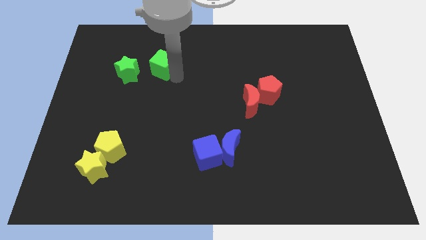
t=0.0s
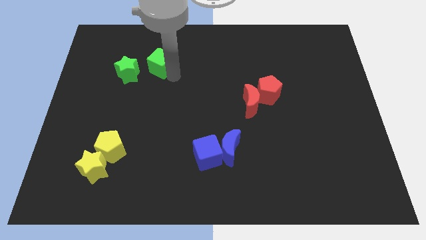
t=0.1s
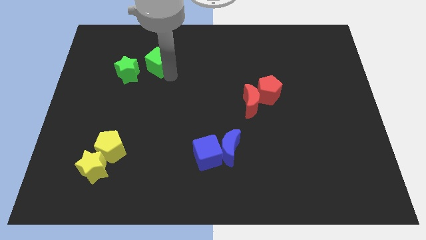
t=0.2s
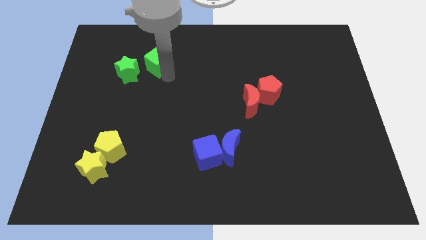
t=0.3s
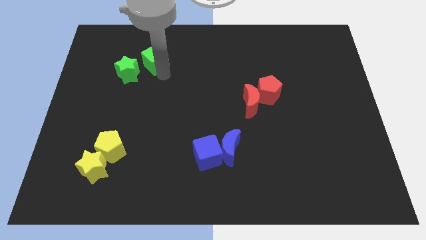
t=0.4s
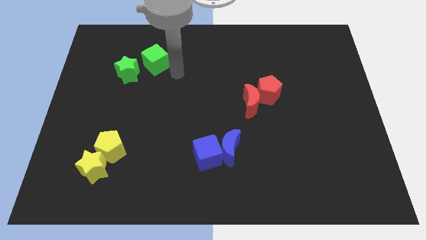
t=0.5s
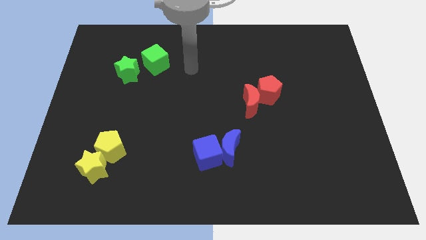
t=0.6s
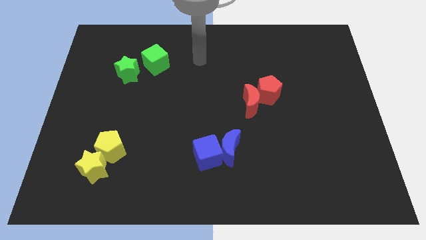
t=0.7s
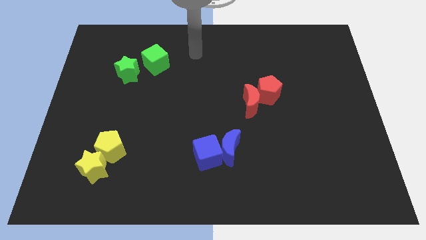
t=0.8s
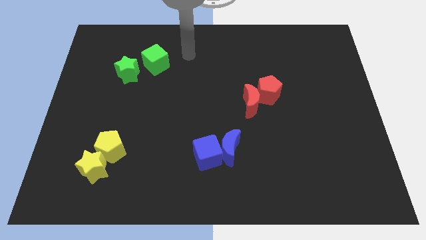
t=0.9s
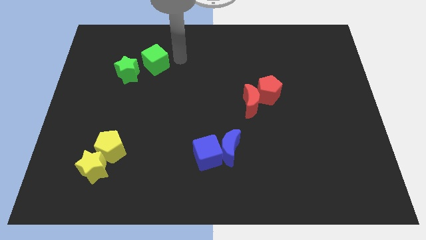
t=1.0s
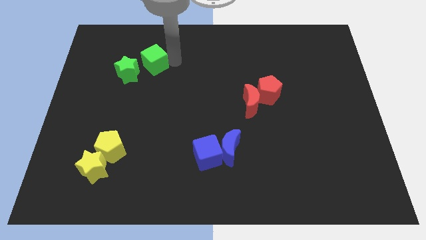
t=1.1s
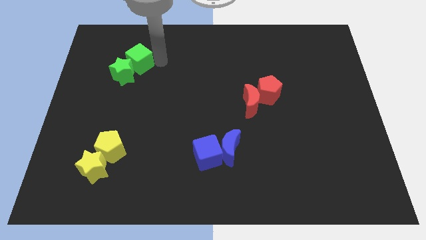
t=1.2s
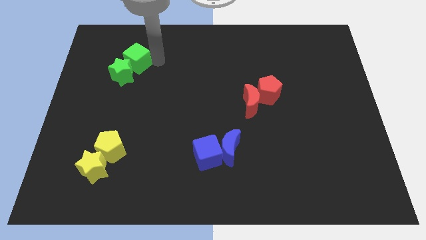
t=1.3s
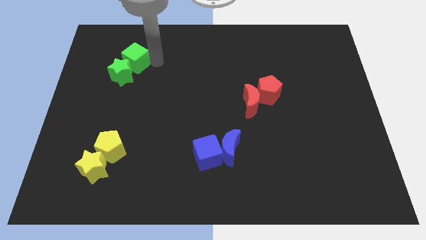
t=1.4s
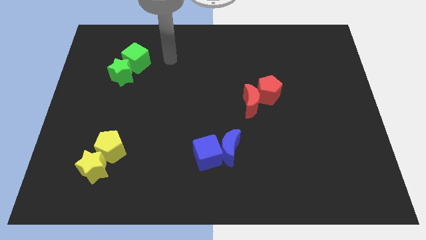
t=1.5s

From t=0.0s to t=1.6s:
move the green cube into the green star

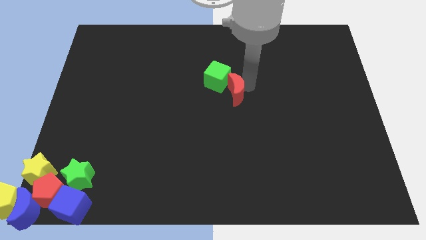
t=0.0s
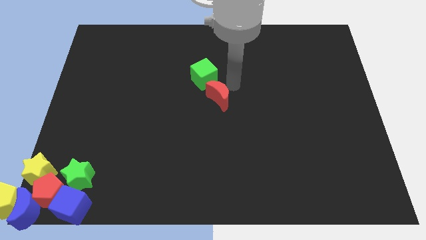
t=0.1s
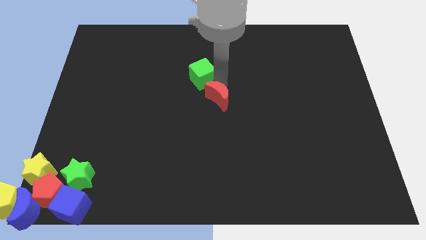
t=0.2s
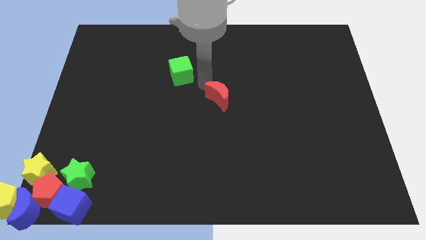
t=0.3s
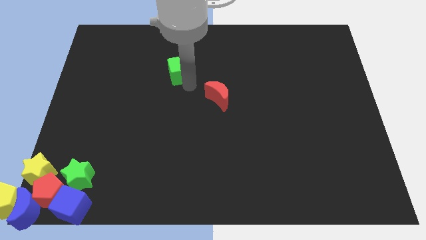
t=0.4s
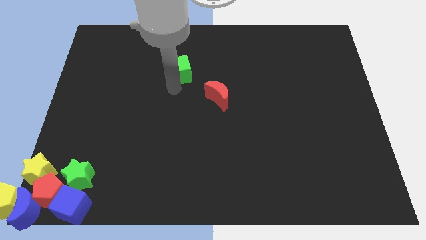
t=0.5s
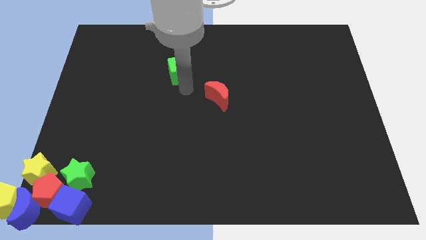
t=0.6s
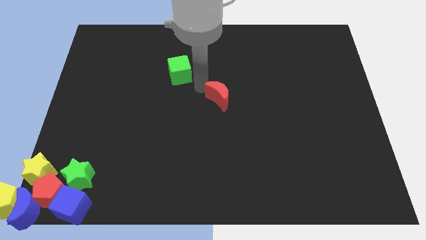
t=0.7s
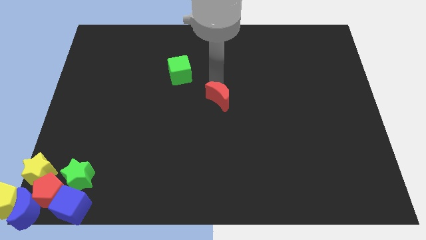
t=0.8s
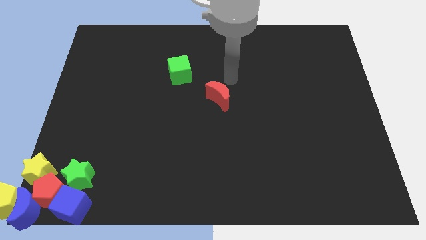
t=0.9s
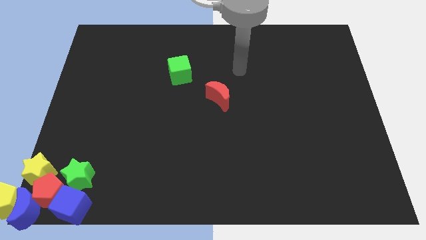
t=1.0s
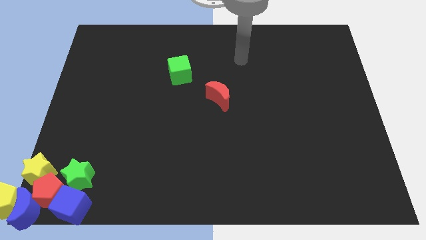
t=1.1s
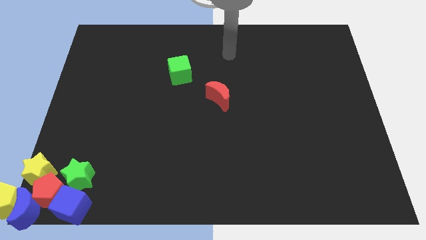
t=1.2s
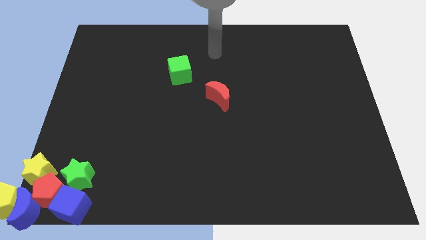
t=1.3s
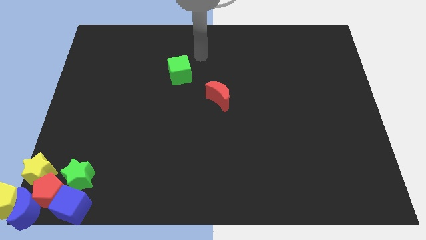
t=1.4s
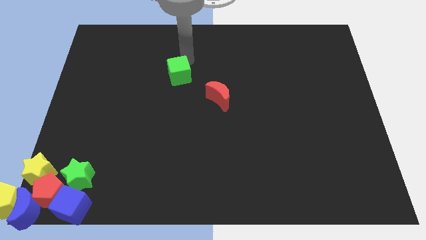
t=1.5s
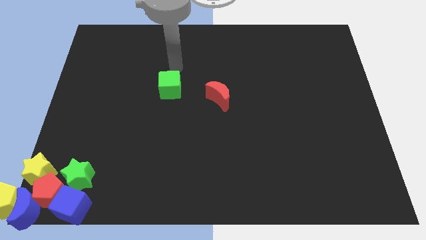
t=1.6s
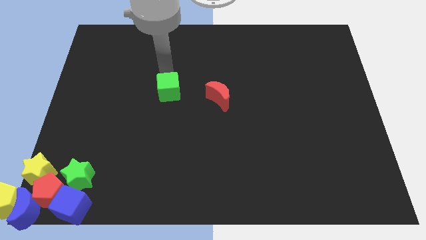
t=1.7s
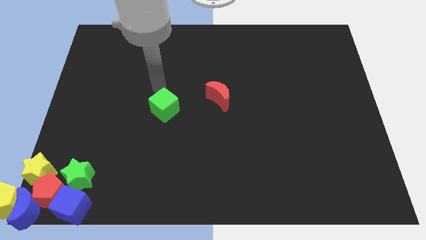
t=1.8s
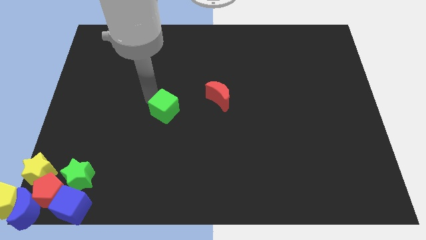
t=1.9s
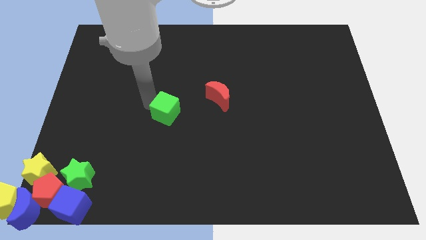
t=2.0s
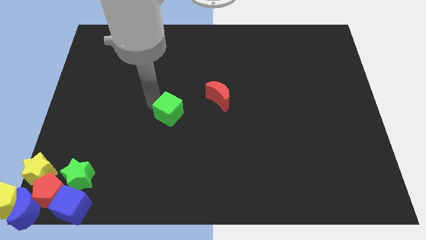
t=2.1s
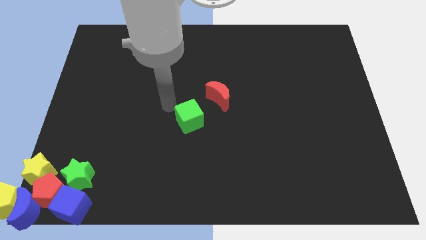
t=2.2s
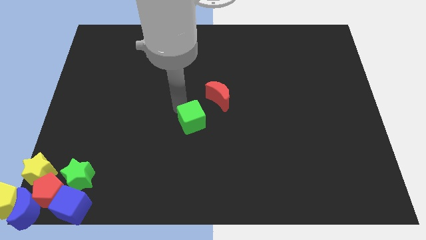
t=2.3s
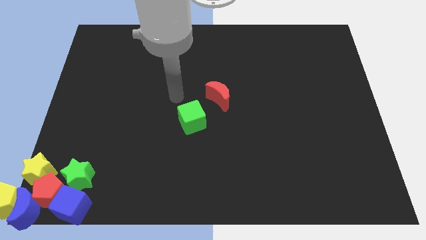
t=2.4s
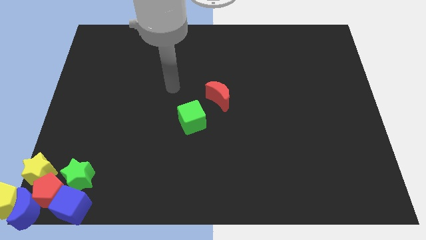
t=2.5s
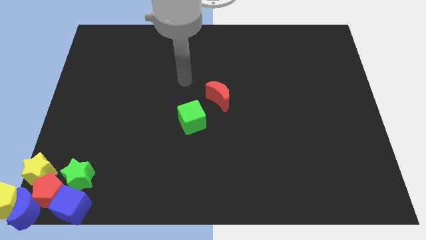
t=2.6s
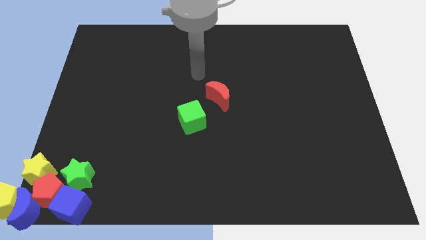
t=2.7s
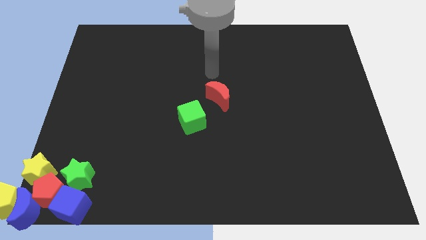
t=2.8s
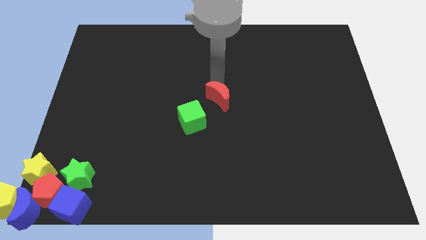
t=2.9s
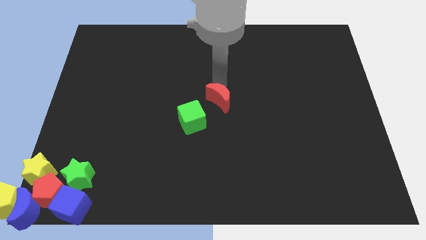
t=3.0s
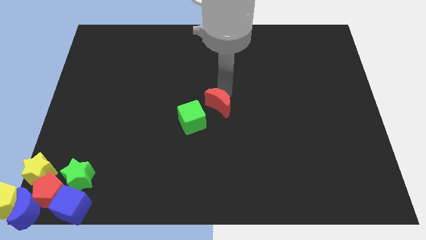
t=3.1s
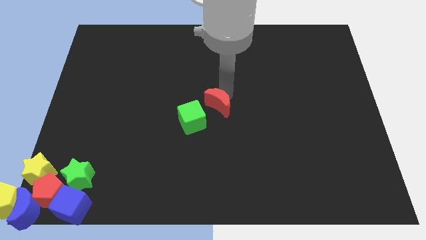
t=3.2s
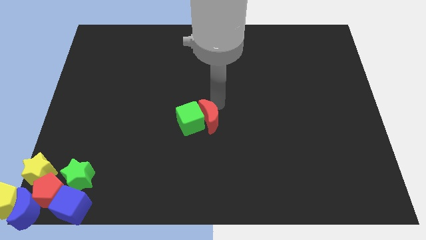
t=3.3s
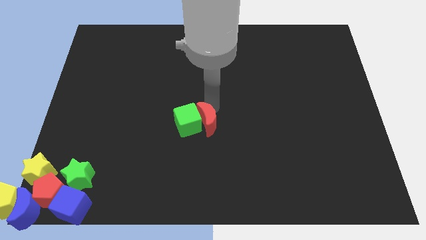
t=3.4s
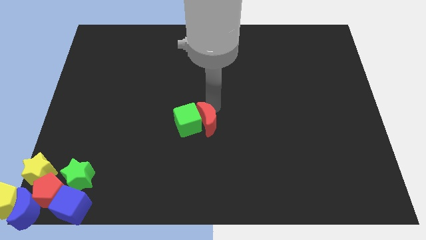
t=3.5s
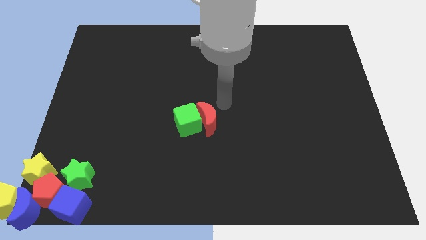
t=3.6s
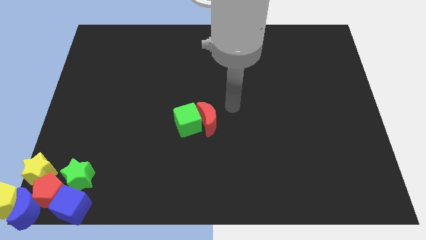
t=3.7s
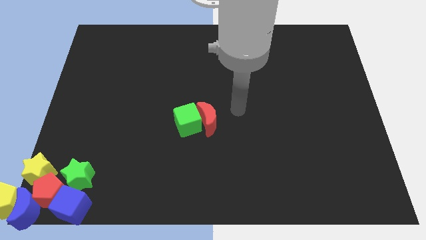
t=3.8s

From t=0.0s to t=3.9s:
move the red crescent right to the green cube

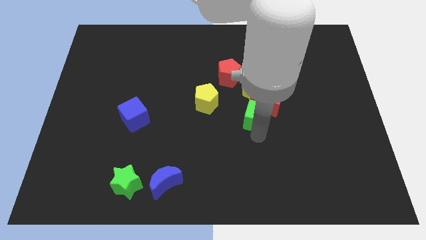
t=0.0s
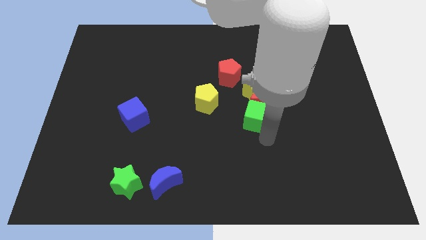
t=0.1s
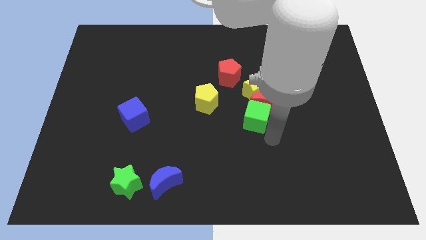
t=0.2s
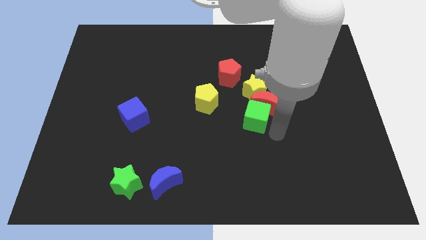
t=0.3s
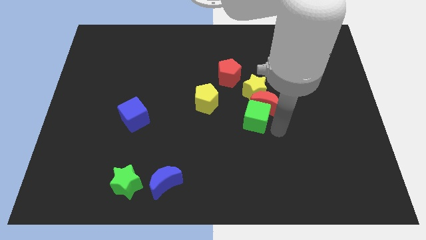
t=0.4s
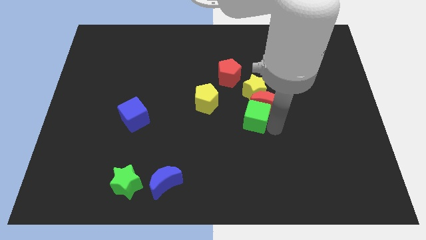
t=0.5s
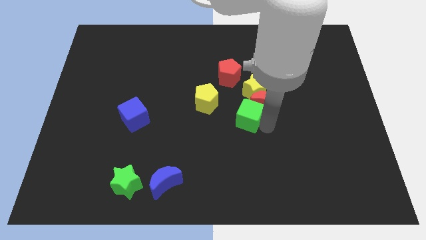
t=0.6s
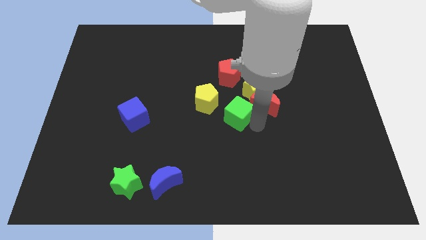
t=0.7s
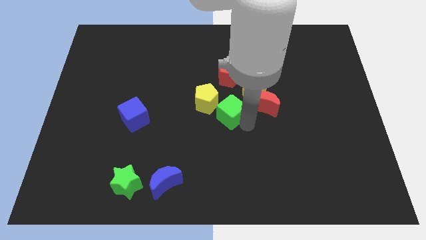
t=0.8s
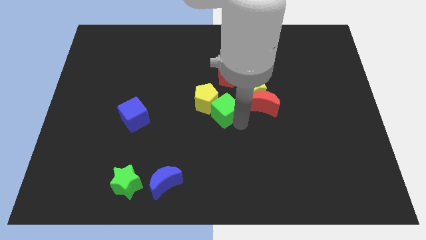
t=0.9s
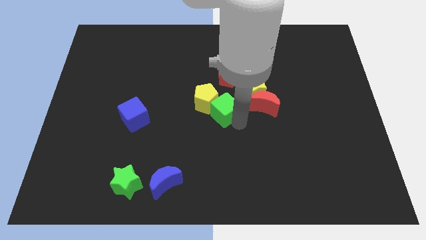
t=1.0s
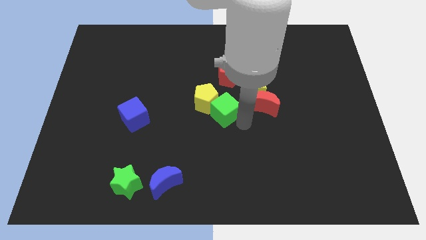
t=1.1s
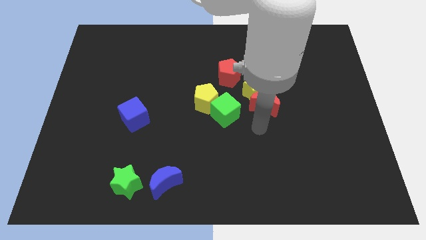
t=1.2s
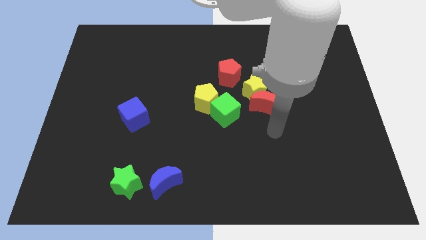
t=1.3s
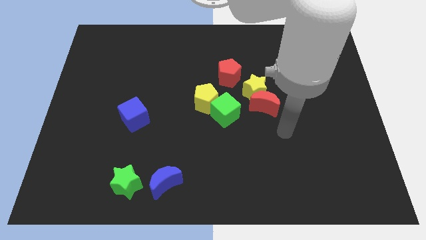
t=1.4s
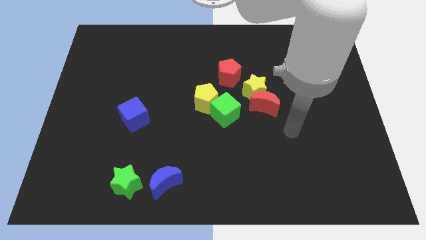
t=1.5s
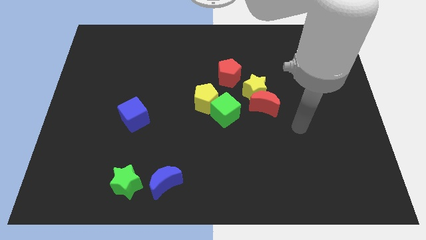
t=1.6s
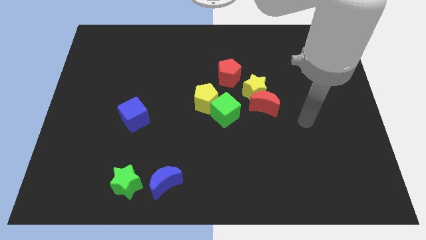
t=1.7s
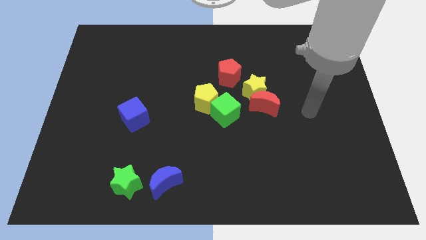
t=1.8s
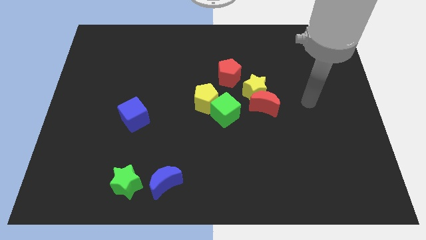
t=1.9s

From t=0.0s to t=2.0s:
move the green cube to the bottom right of the yellow pentagon

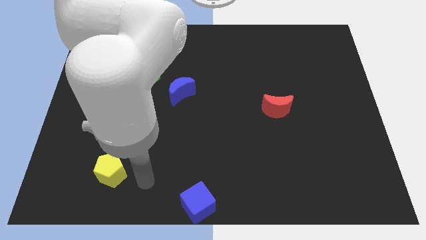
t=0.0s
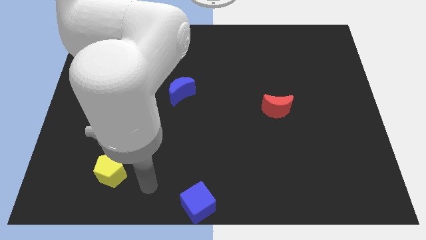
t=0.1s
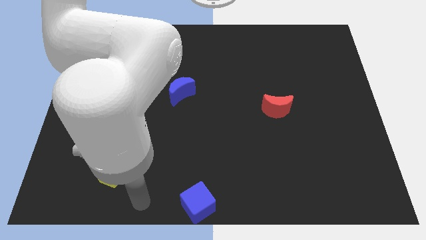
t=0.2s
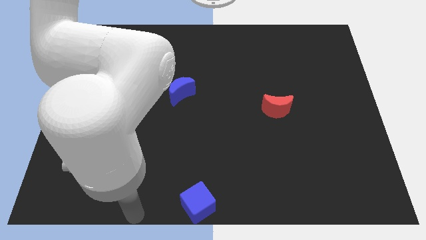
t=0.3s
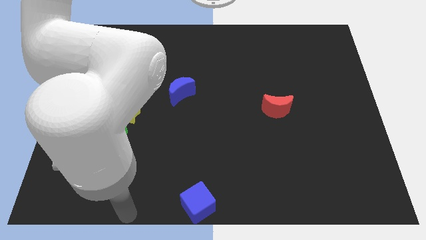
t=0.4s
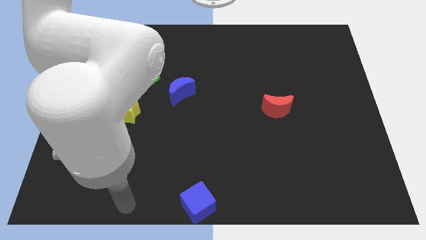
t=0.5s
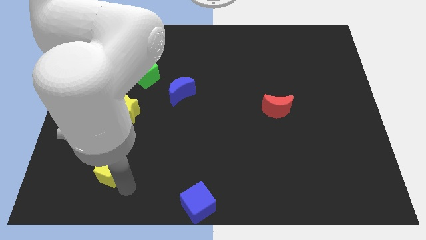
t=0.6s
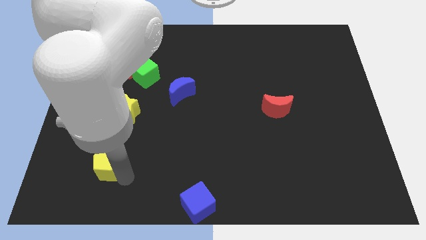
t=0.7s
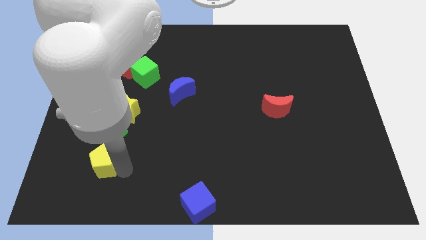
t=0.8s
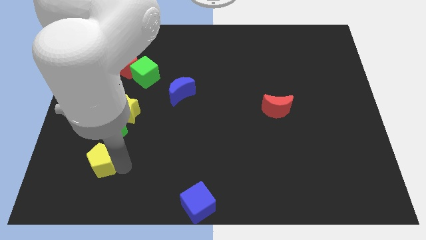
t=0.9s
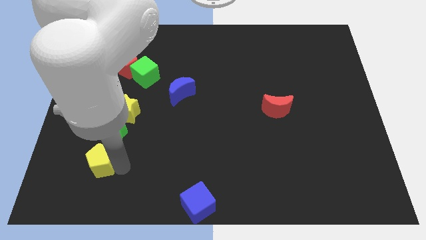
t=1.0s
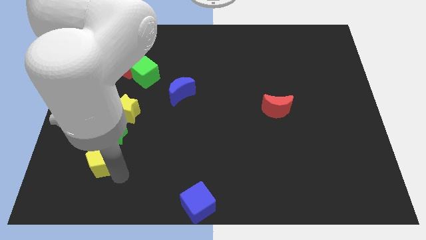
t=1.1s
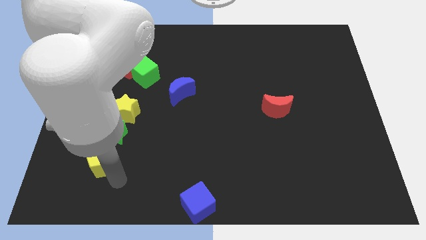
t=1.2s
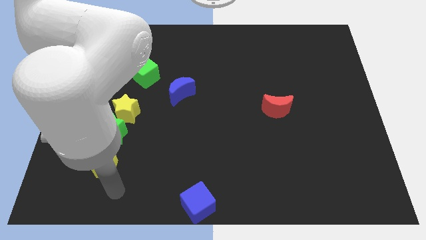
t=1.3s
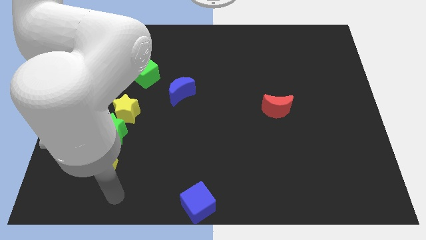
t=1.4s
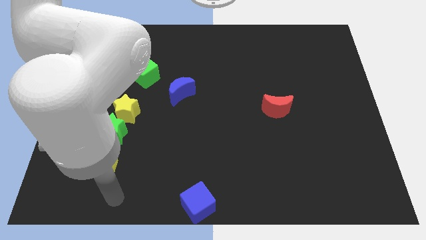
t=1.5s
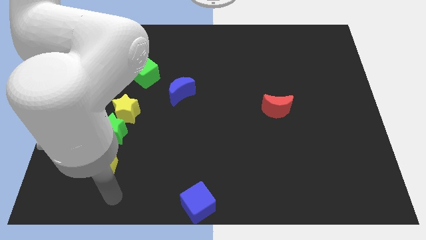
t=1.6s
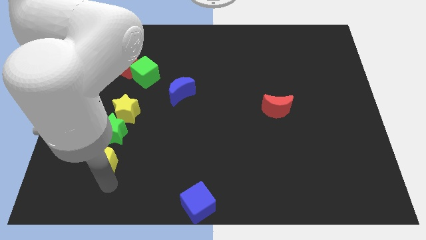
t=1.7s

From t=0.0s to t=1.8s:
push the yellow pentagon towards the green star
